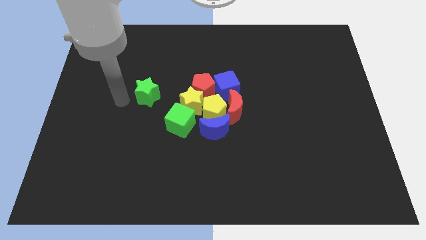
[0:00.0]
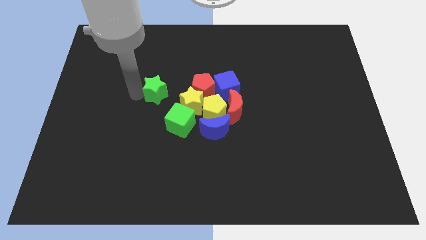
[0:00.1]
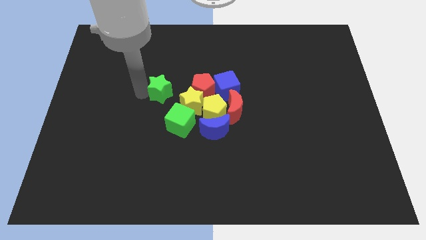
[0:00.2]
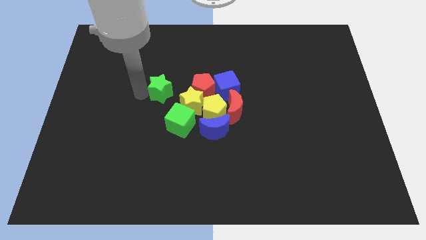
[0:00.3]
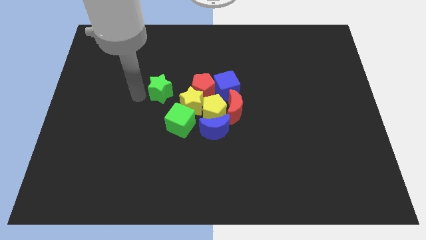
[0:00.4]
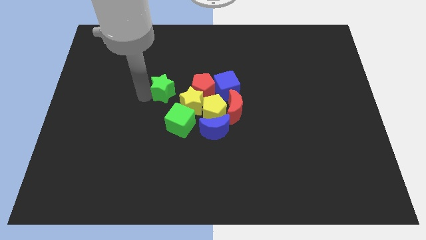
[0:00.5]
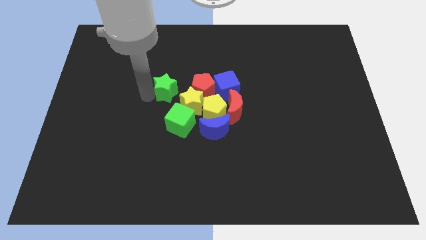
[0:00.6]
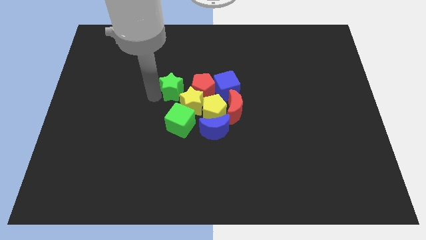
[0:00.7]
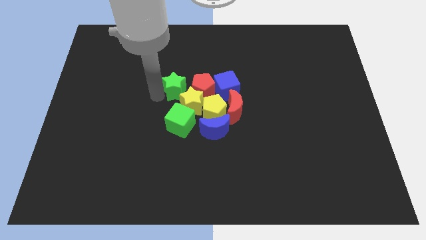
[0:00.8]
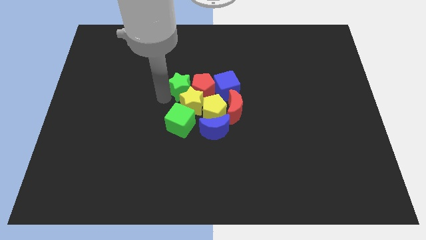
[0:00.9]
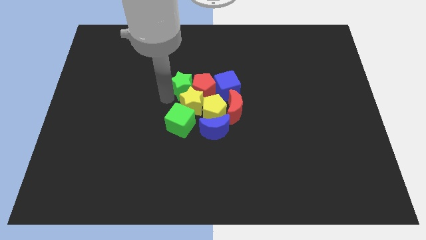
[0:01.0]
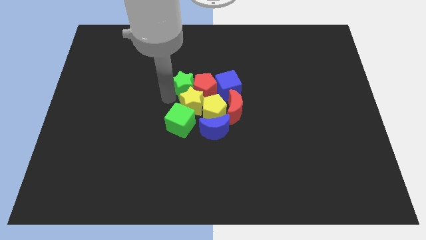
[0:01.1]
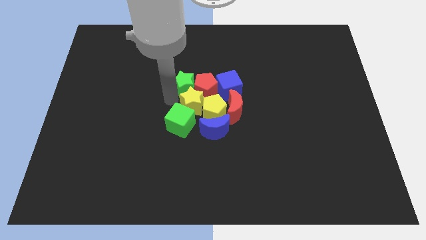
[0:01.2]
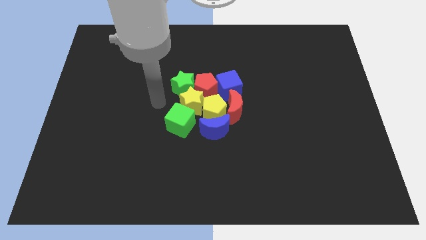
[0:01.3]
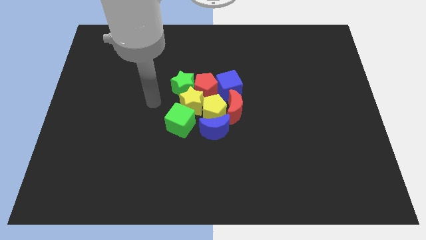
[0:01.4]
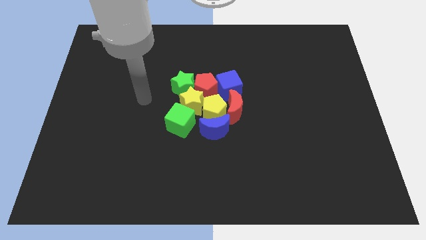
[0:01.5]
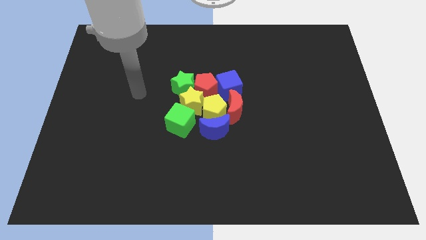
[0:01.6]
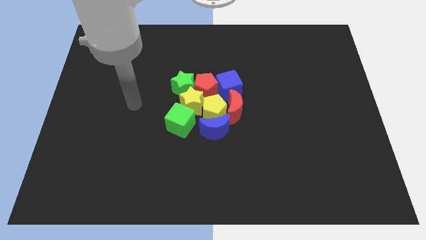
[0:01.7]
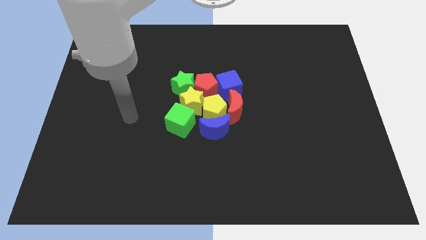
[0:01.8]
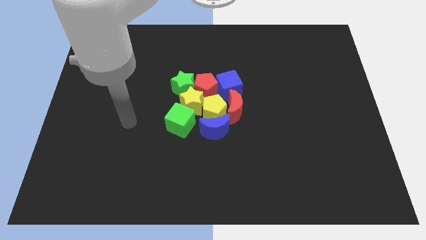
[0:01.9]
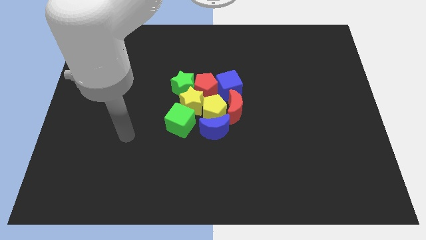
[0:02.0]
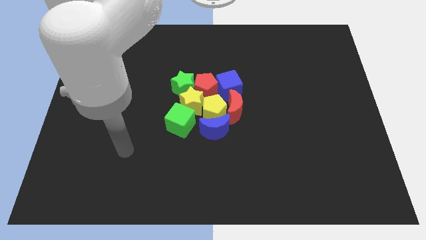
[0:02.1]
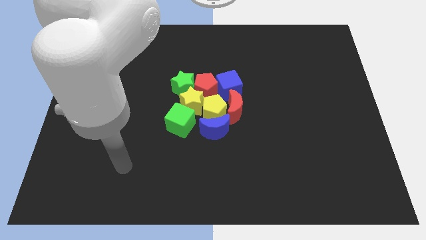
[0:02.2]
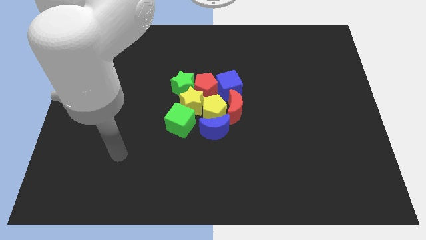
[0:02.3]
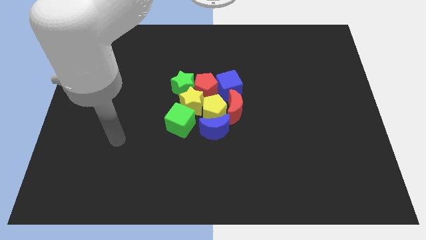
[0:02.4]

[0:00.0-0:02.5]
push the green star towards the left side of the red pentagon

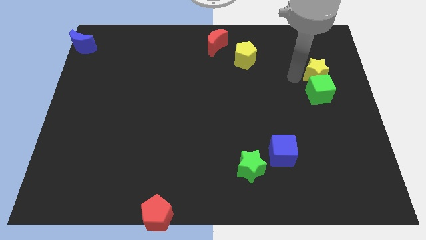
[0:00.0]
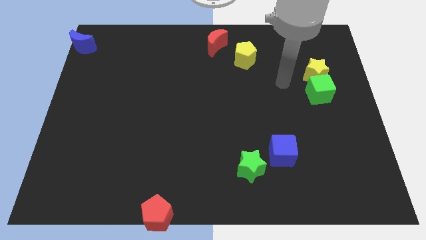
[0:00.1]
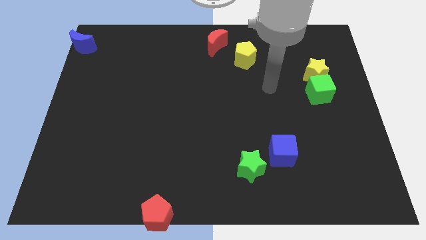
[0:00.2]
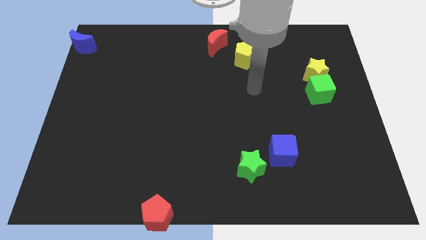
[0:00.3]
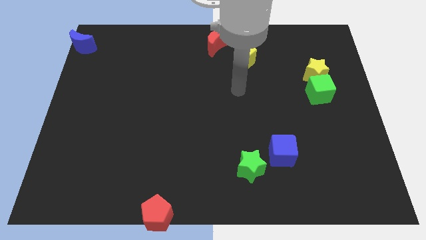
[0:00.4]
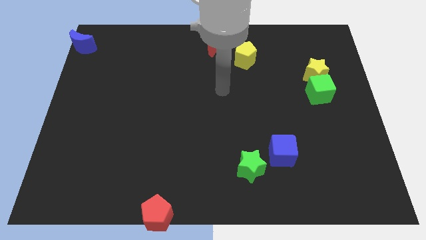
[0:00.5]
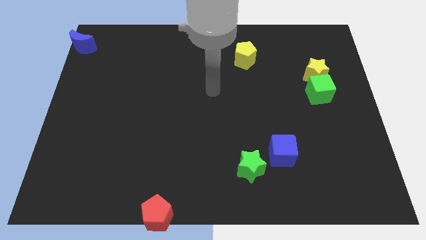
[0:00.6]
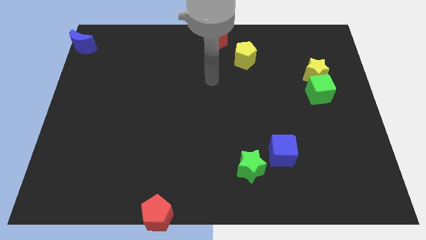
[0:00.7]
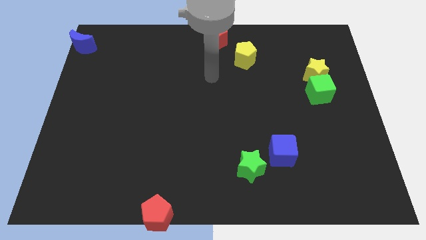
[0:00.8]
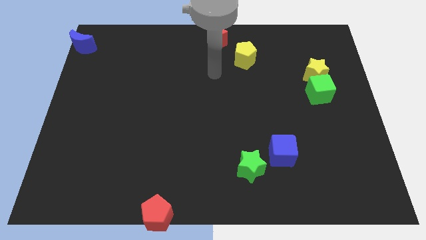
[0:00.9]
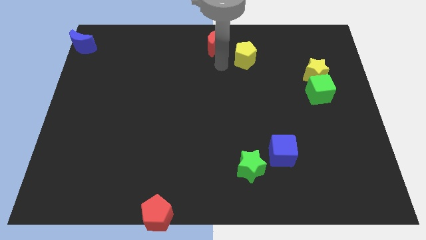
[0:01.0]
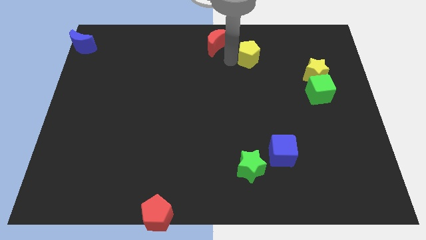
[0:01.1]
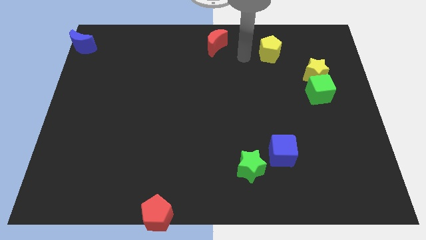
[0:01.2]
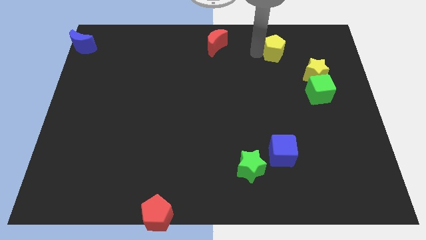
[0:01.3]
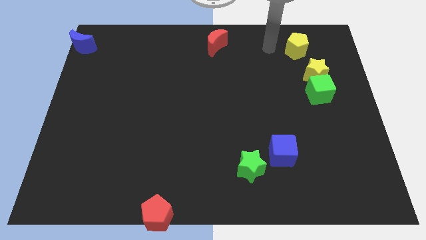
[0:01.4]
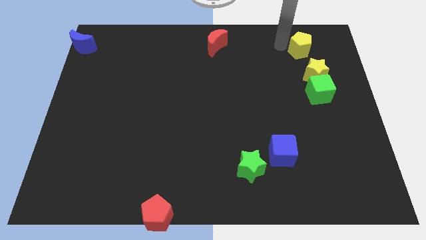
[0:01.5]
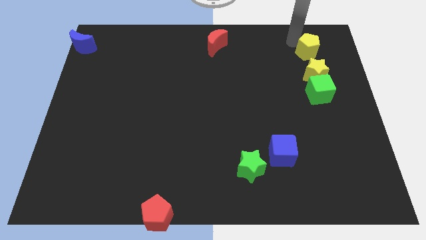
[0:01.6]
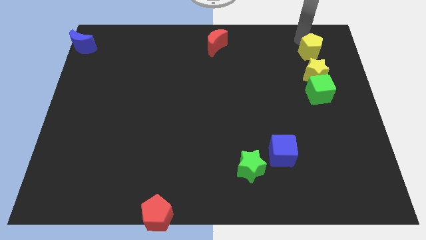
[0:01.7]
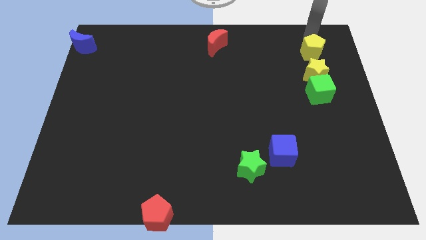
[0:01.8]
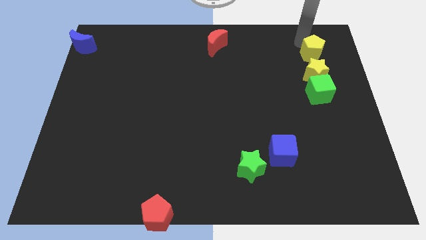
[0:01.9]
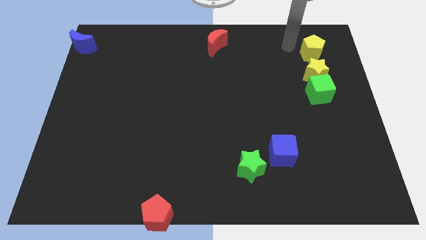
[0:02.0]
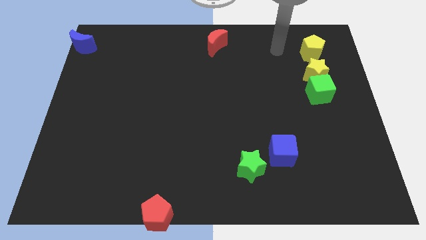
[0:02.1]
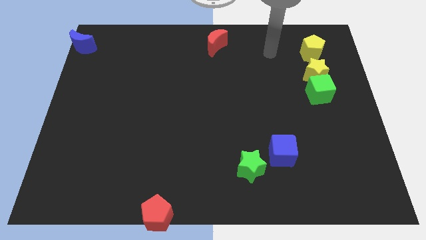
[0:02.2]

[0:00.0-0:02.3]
move the yellow pentagon above the yellow star

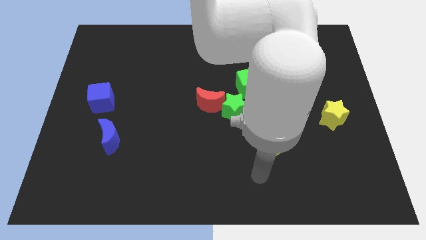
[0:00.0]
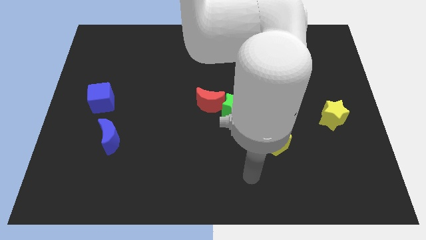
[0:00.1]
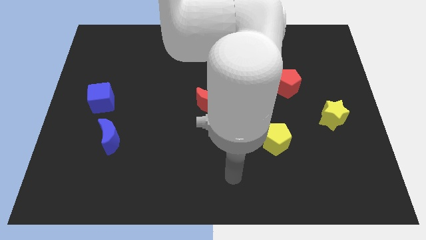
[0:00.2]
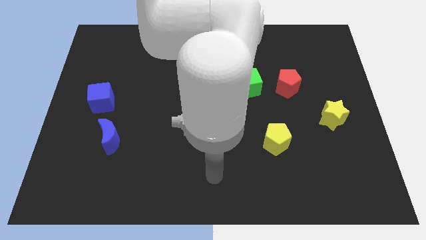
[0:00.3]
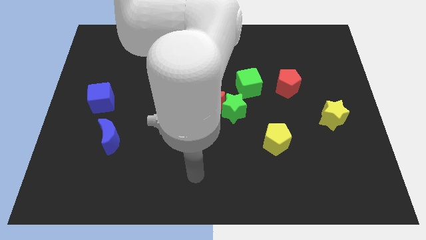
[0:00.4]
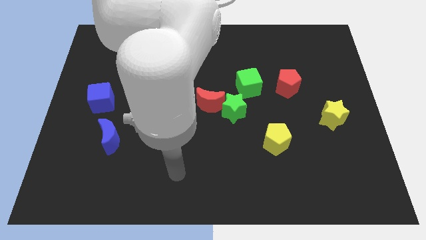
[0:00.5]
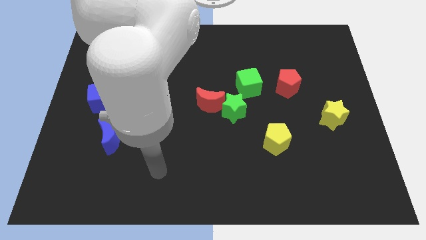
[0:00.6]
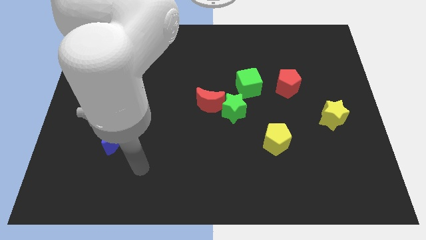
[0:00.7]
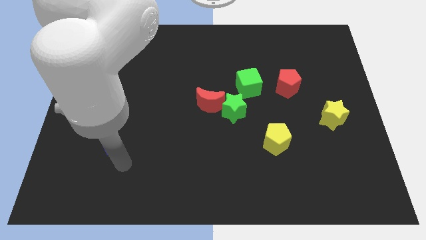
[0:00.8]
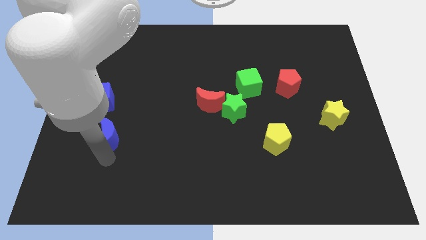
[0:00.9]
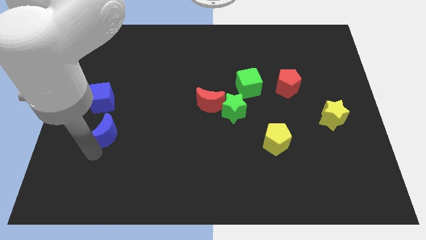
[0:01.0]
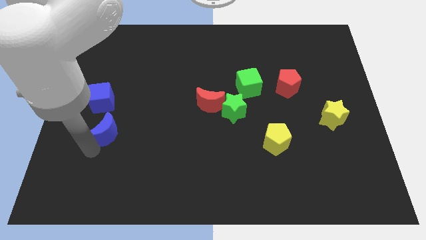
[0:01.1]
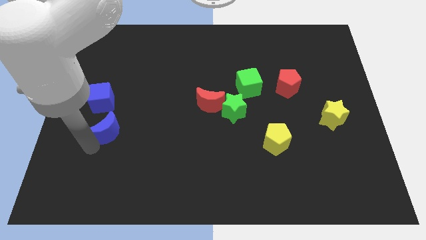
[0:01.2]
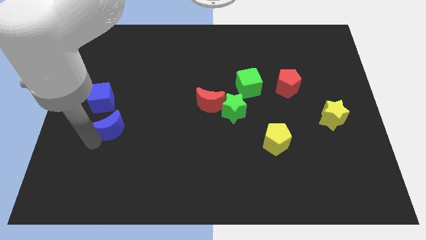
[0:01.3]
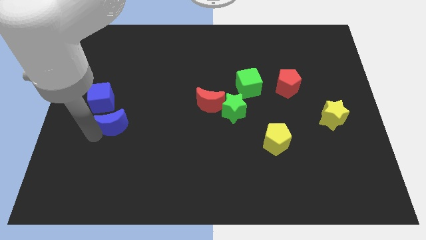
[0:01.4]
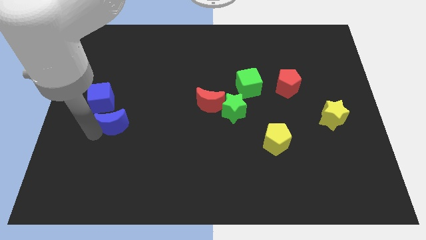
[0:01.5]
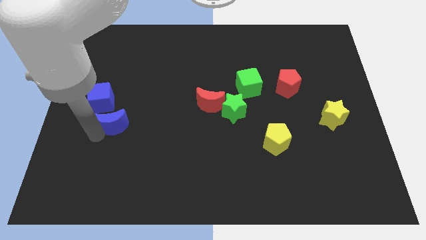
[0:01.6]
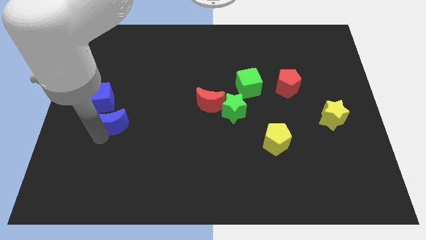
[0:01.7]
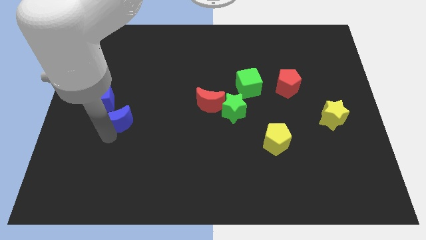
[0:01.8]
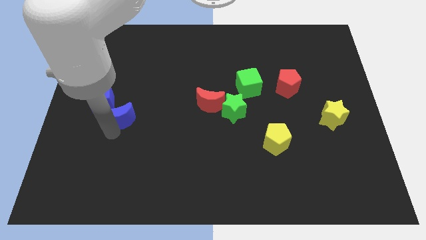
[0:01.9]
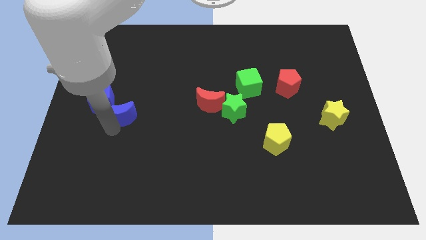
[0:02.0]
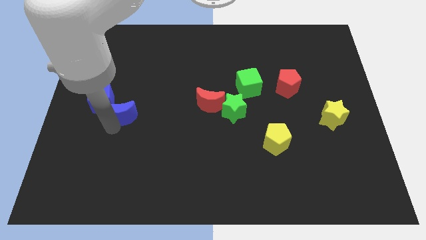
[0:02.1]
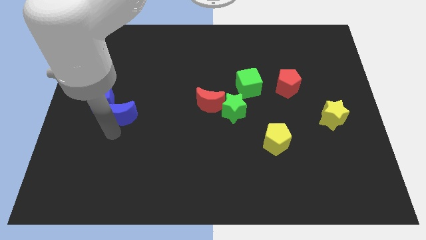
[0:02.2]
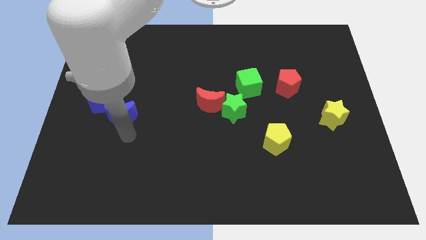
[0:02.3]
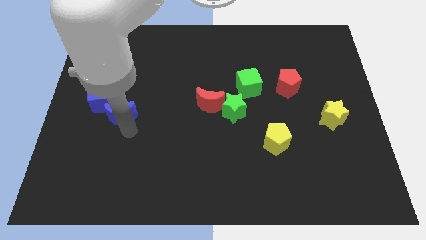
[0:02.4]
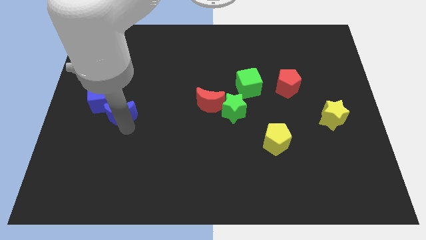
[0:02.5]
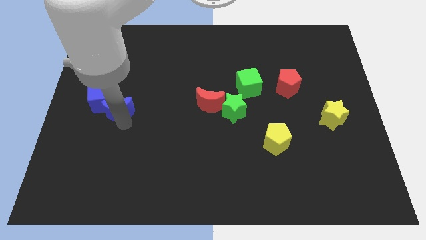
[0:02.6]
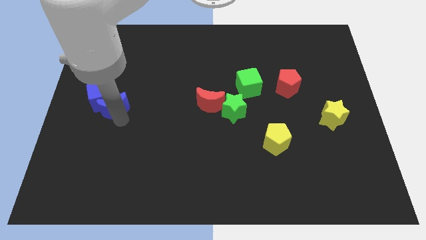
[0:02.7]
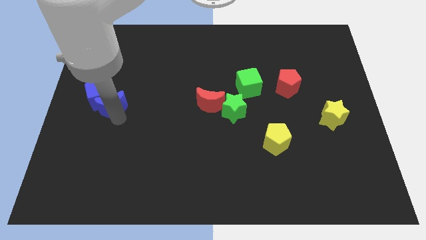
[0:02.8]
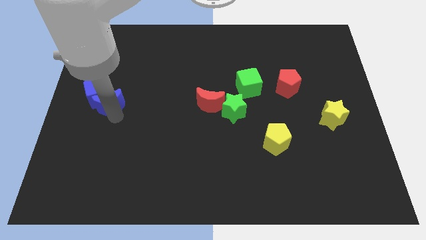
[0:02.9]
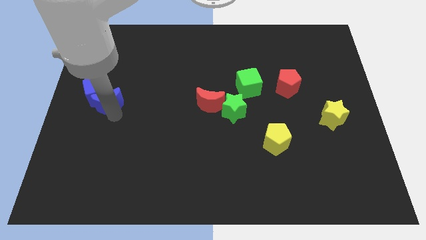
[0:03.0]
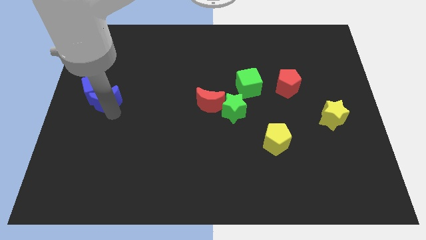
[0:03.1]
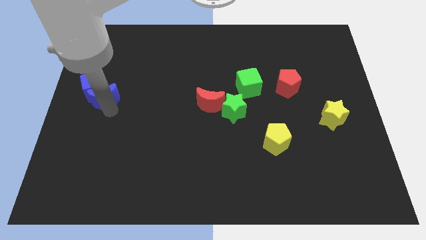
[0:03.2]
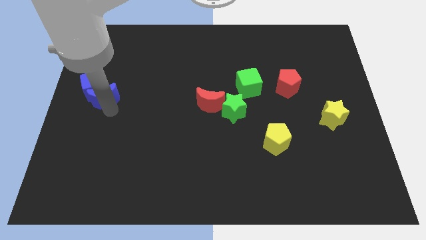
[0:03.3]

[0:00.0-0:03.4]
push the blue moon into the blue cube

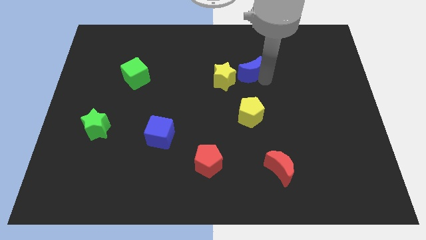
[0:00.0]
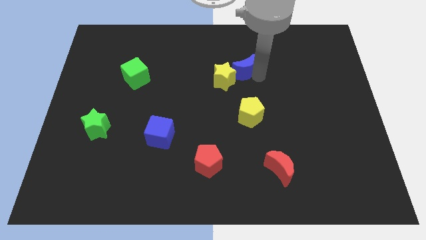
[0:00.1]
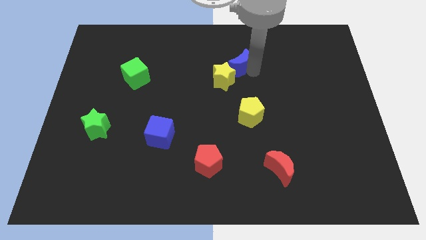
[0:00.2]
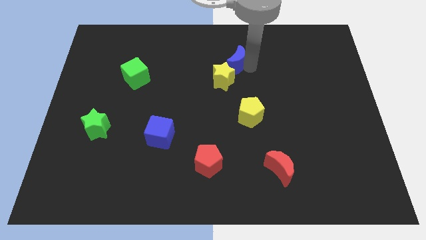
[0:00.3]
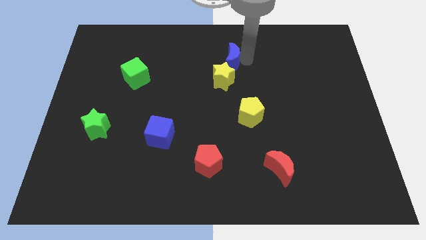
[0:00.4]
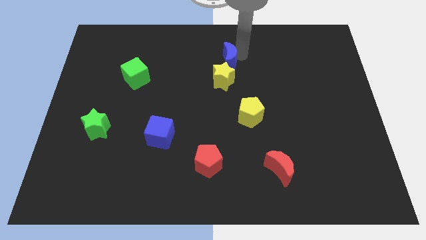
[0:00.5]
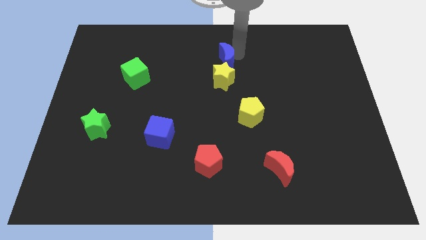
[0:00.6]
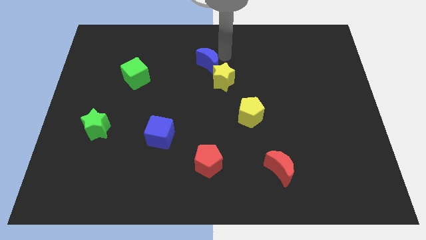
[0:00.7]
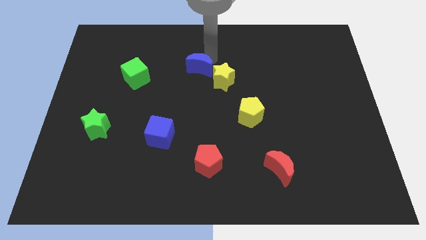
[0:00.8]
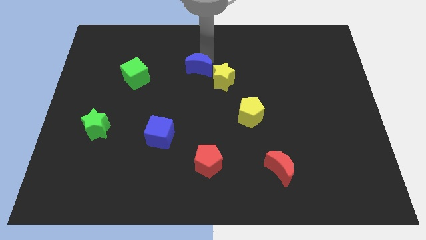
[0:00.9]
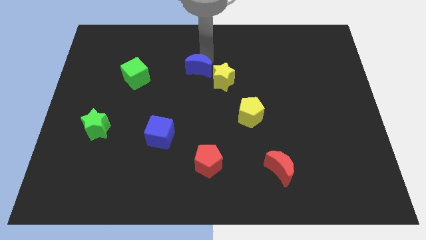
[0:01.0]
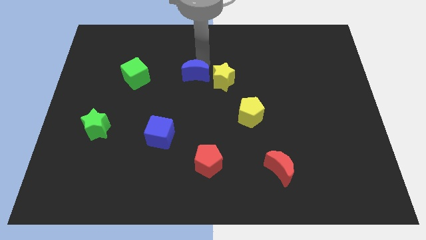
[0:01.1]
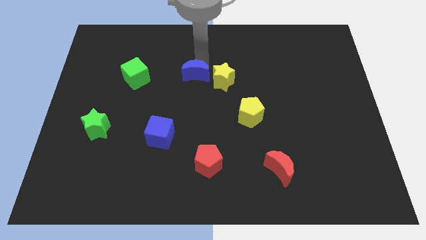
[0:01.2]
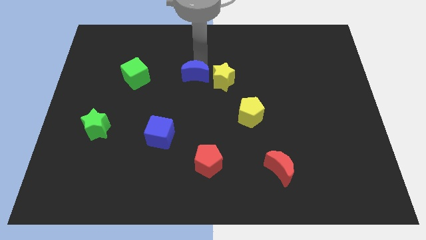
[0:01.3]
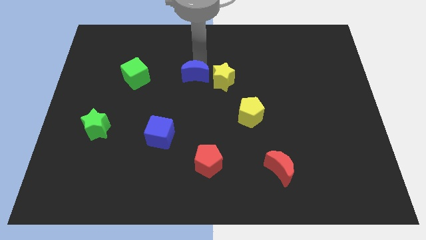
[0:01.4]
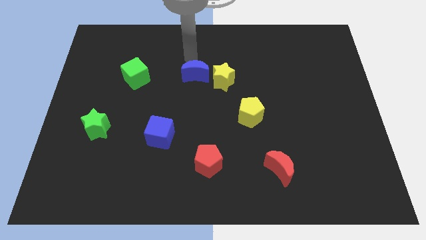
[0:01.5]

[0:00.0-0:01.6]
place the blue moon left to the yellow star
